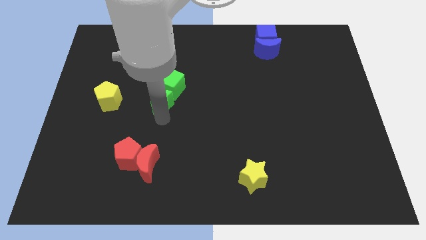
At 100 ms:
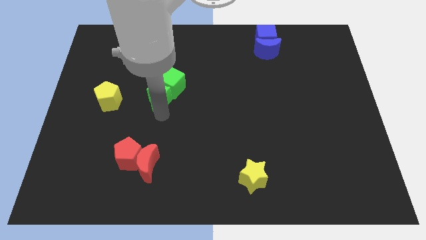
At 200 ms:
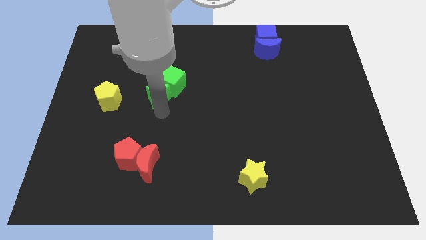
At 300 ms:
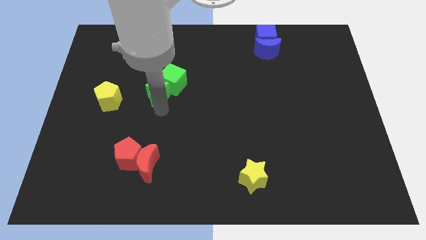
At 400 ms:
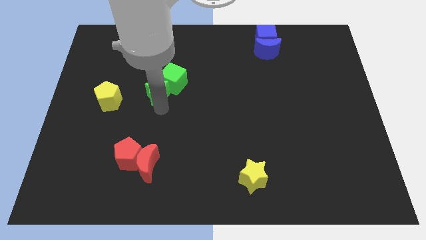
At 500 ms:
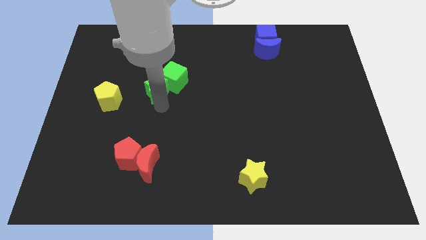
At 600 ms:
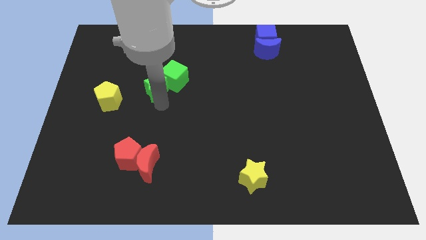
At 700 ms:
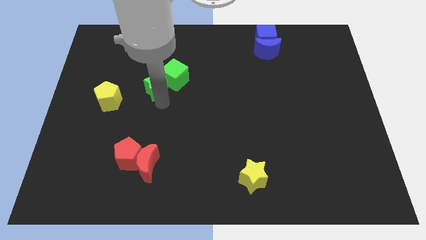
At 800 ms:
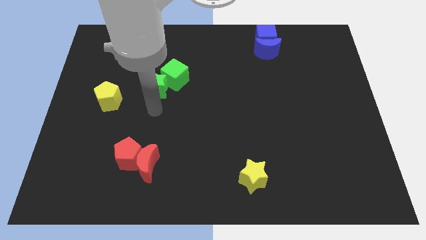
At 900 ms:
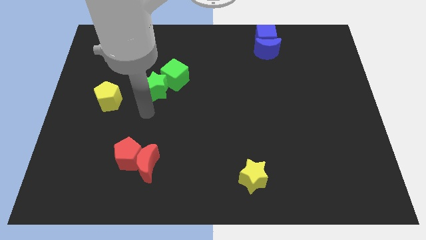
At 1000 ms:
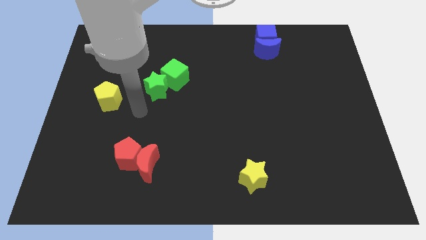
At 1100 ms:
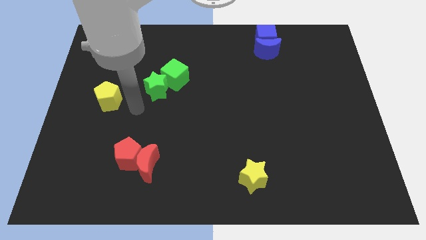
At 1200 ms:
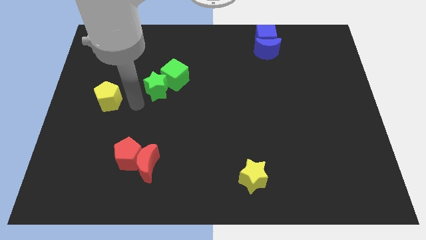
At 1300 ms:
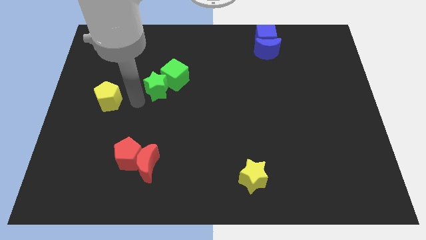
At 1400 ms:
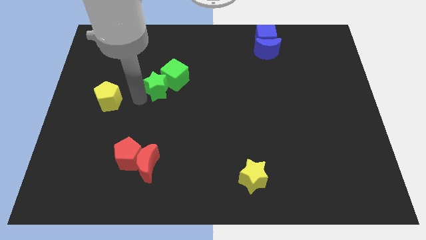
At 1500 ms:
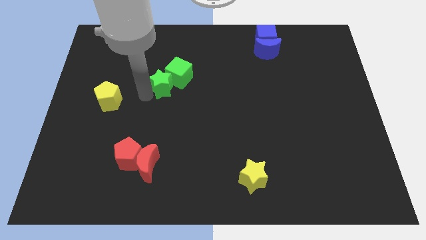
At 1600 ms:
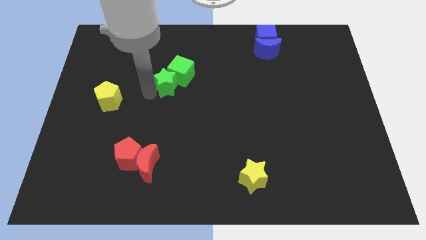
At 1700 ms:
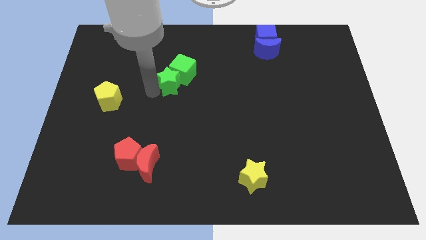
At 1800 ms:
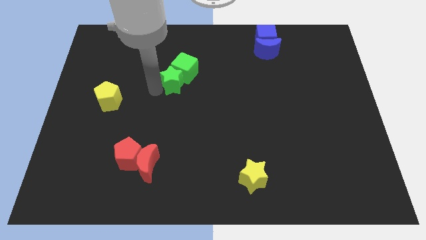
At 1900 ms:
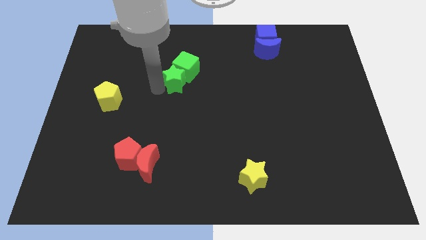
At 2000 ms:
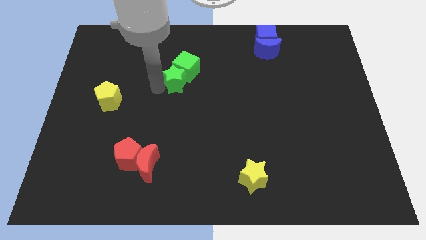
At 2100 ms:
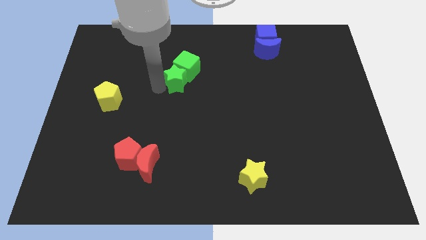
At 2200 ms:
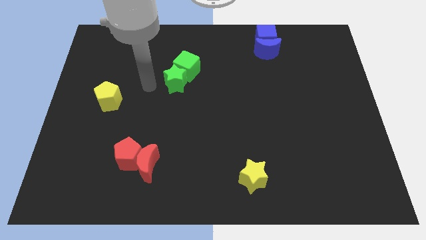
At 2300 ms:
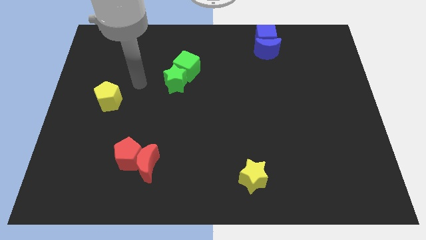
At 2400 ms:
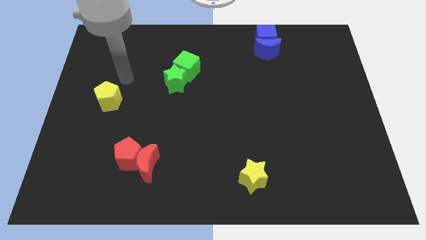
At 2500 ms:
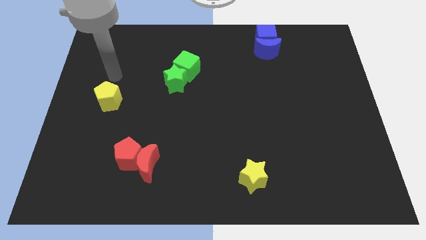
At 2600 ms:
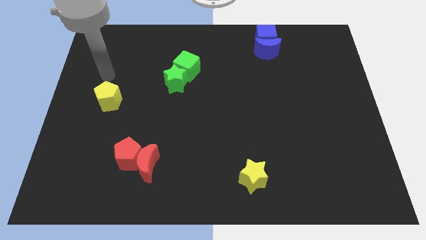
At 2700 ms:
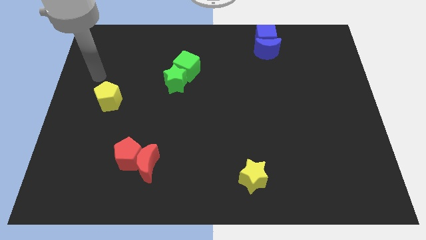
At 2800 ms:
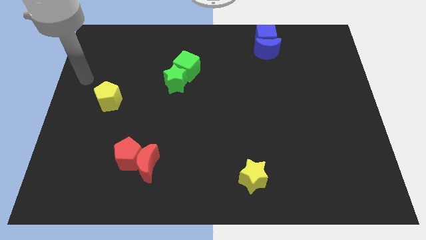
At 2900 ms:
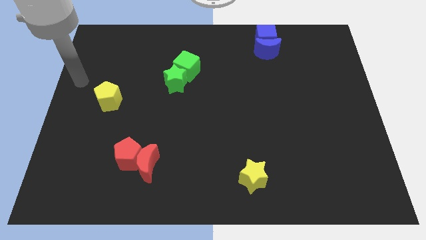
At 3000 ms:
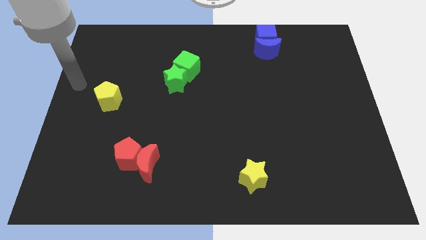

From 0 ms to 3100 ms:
push the green blocks towards the top side of the board

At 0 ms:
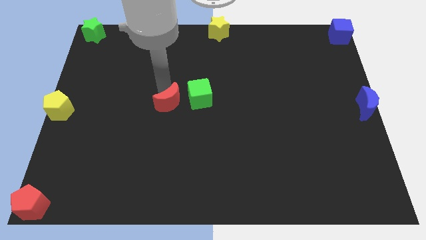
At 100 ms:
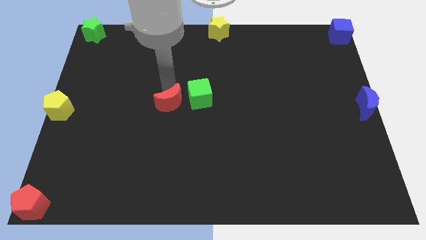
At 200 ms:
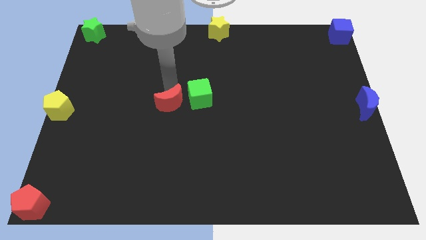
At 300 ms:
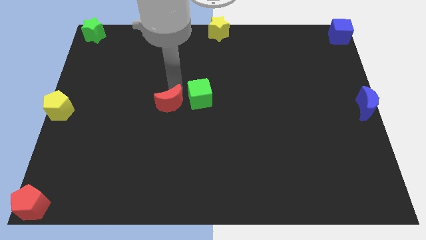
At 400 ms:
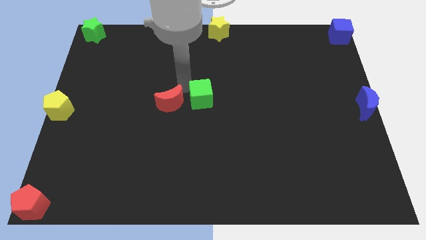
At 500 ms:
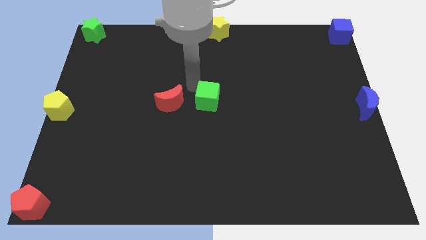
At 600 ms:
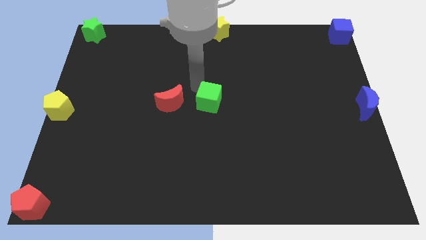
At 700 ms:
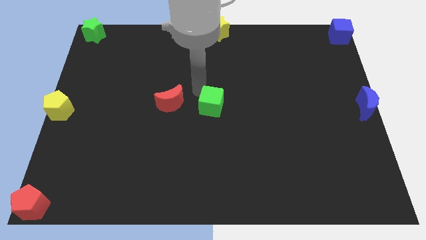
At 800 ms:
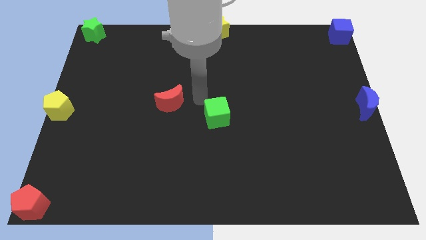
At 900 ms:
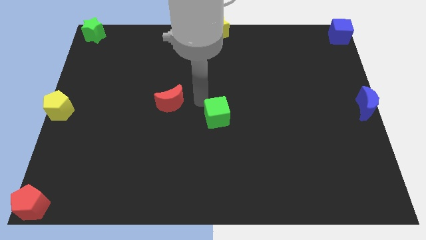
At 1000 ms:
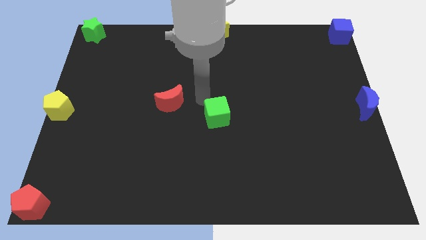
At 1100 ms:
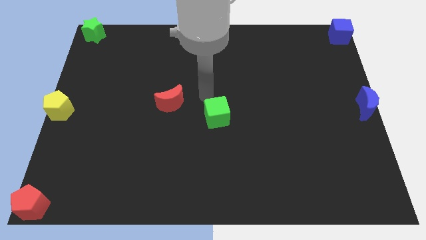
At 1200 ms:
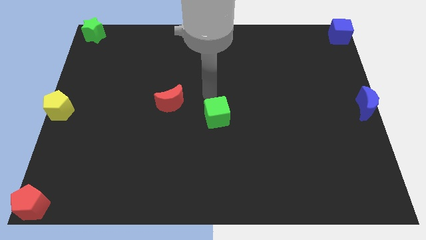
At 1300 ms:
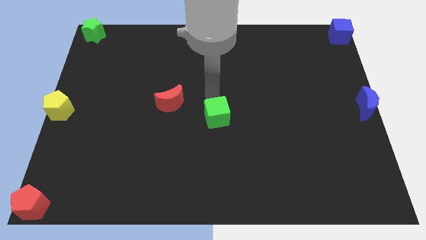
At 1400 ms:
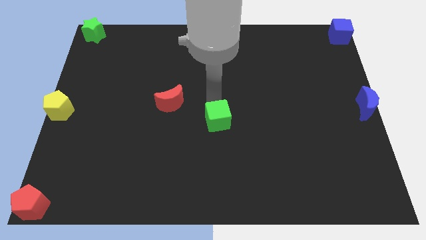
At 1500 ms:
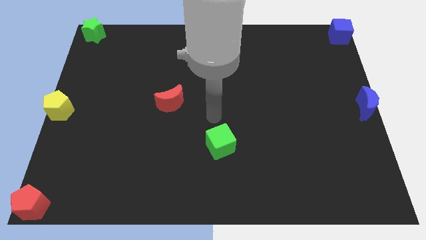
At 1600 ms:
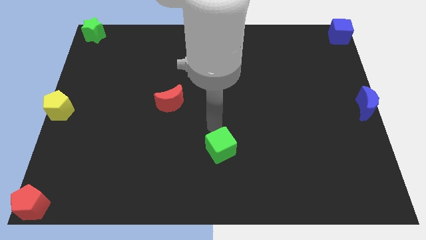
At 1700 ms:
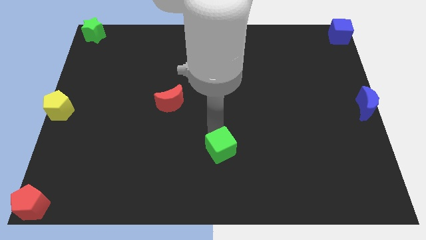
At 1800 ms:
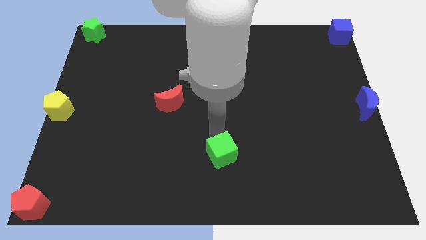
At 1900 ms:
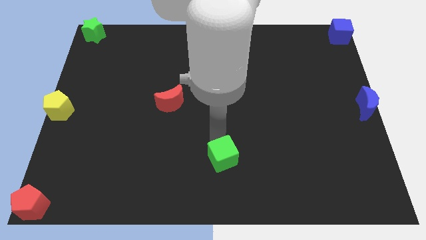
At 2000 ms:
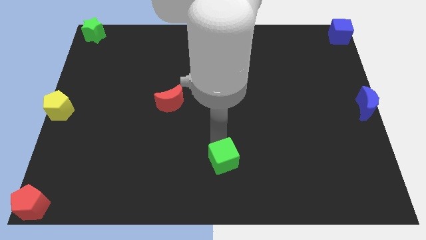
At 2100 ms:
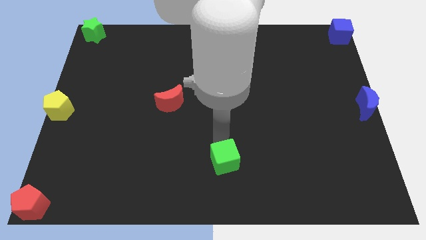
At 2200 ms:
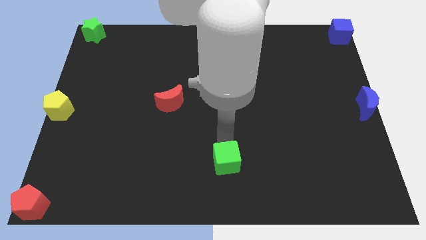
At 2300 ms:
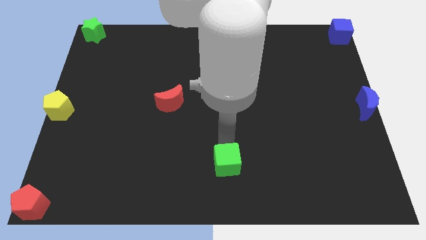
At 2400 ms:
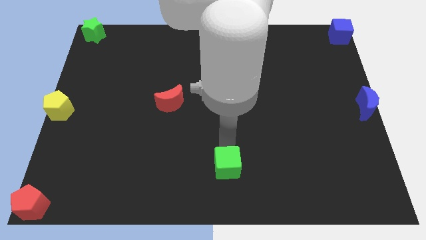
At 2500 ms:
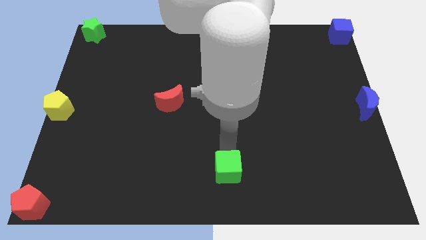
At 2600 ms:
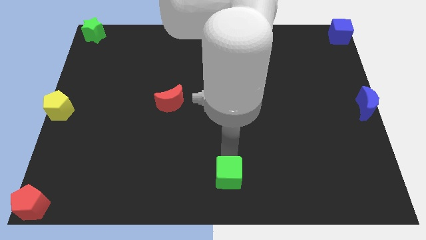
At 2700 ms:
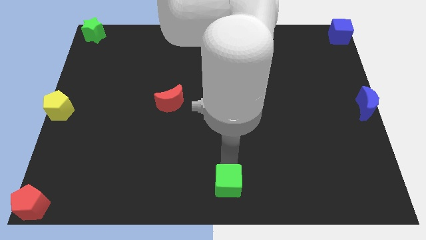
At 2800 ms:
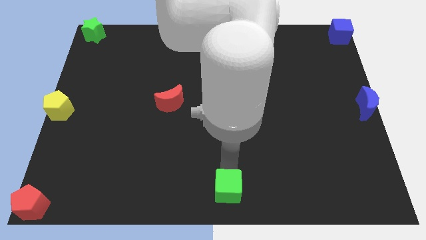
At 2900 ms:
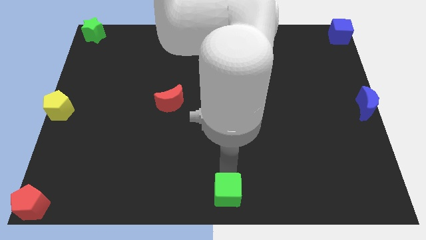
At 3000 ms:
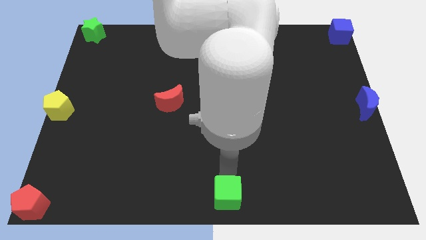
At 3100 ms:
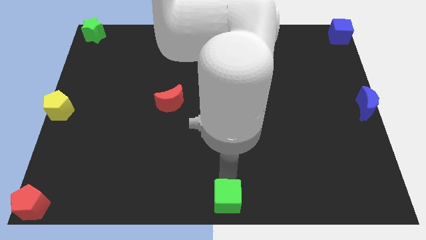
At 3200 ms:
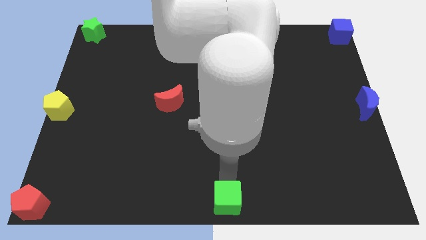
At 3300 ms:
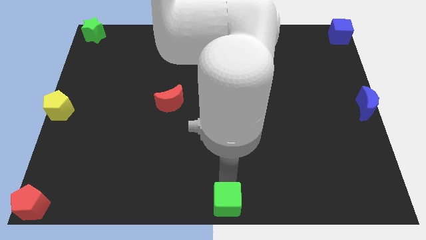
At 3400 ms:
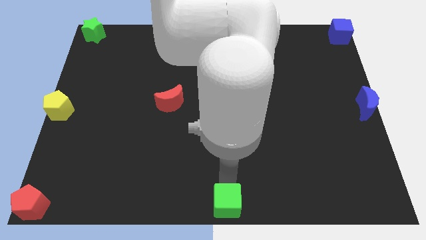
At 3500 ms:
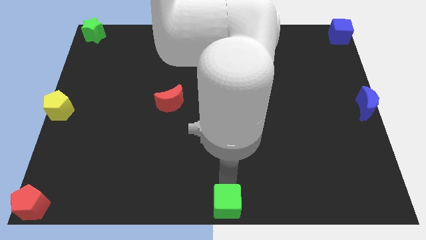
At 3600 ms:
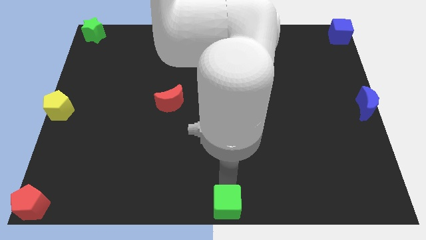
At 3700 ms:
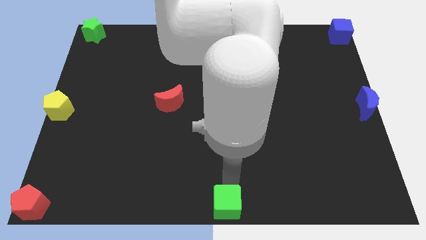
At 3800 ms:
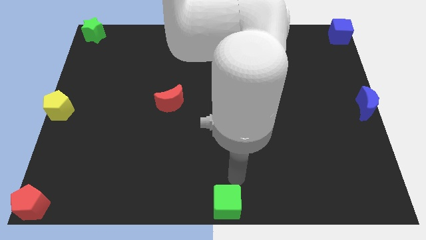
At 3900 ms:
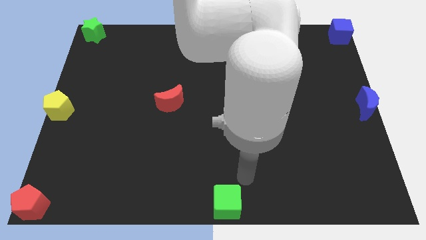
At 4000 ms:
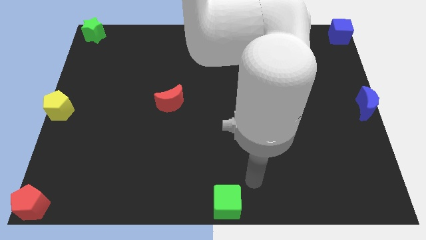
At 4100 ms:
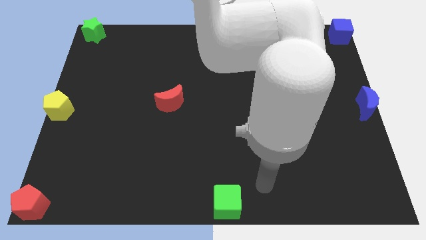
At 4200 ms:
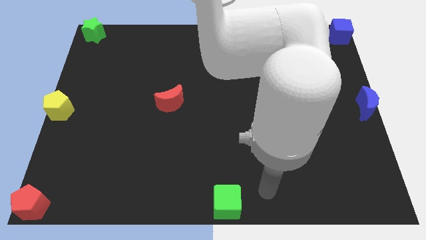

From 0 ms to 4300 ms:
move green cube to the bottom center

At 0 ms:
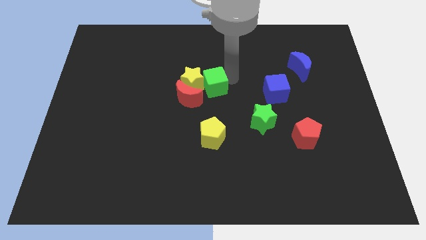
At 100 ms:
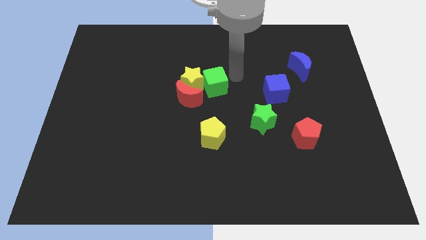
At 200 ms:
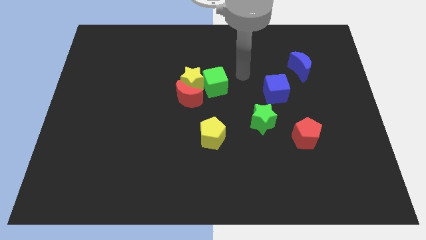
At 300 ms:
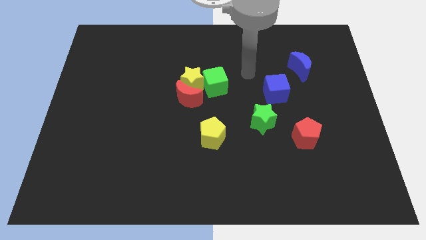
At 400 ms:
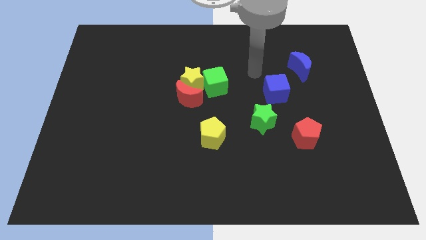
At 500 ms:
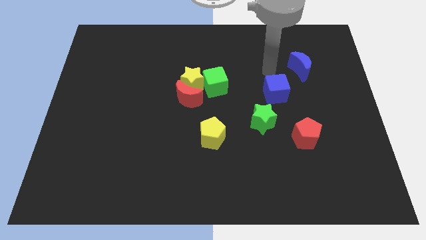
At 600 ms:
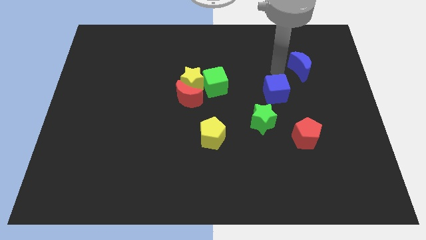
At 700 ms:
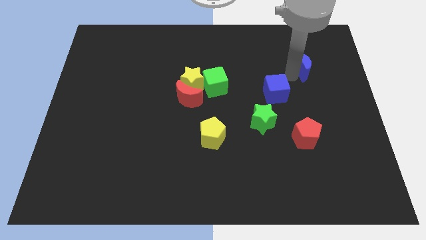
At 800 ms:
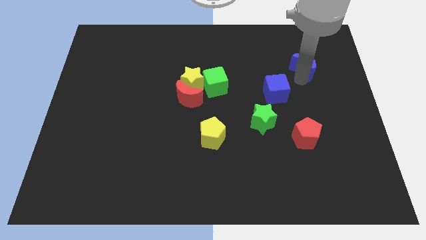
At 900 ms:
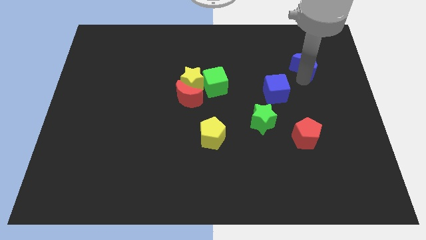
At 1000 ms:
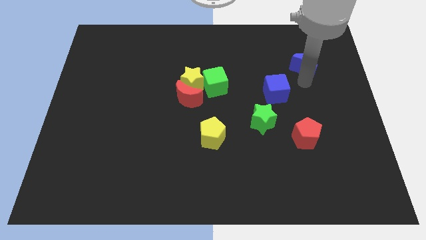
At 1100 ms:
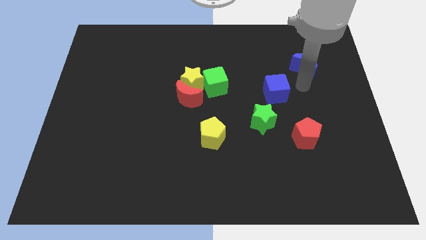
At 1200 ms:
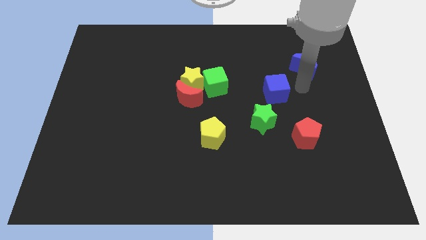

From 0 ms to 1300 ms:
move away from the green cube

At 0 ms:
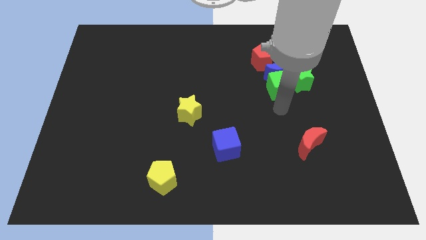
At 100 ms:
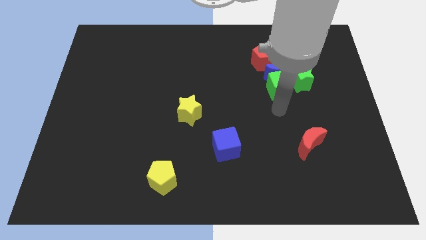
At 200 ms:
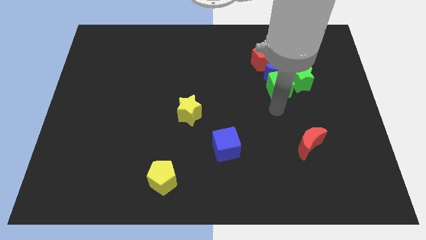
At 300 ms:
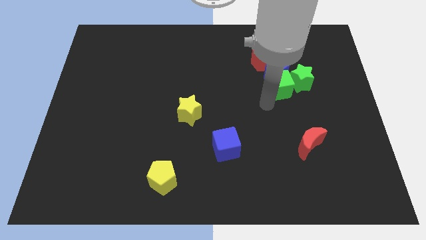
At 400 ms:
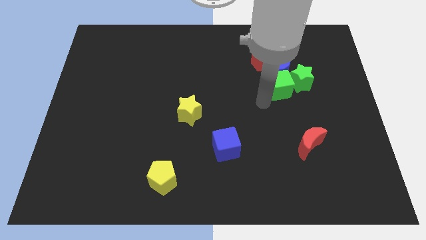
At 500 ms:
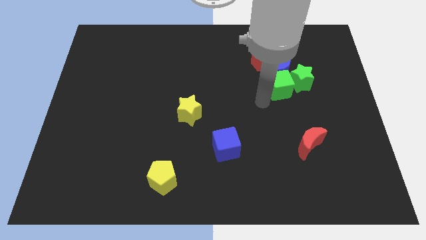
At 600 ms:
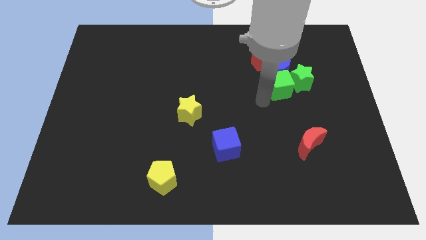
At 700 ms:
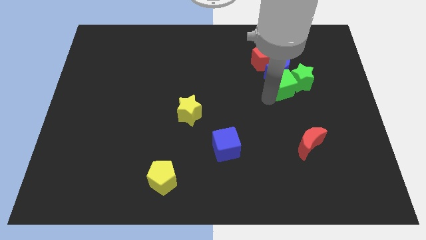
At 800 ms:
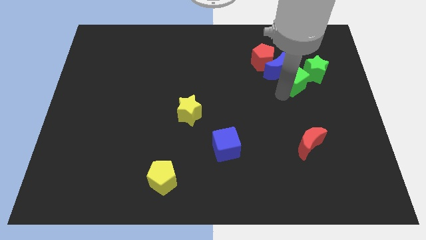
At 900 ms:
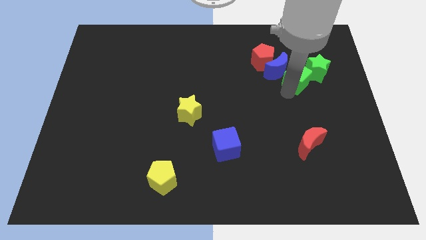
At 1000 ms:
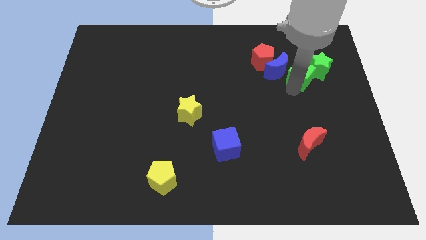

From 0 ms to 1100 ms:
slide green cube into green star
